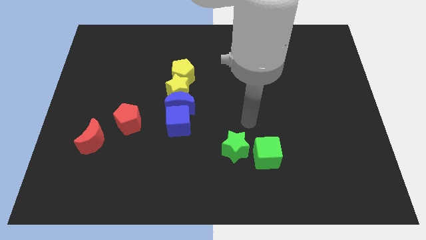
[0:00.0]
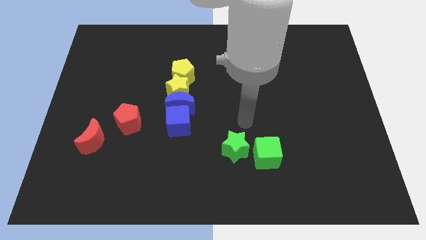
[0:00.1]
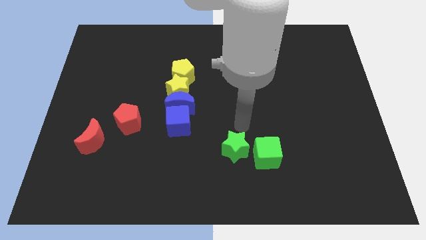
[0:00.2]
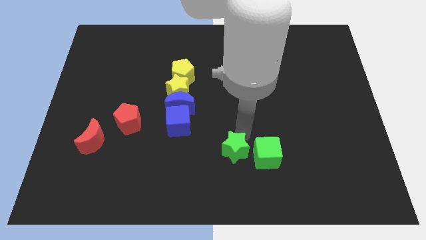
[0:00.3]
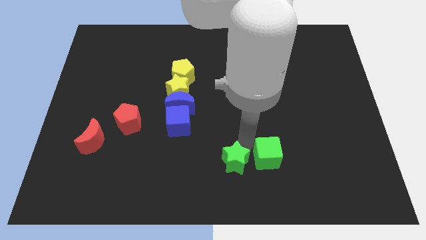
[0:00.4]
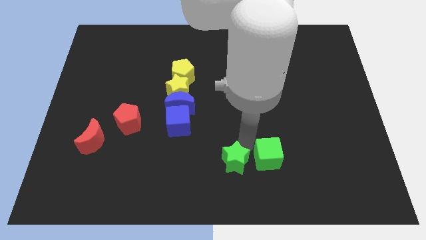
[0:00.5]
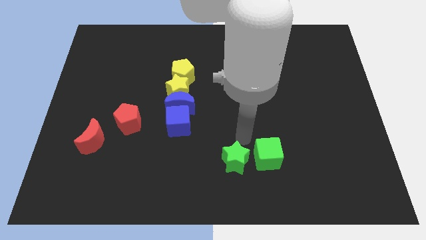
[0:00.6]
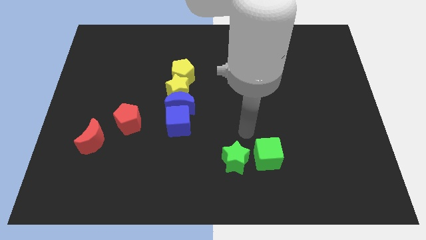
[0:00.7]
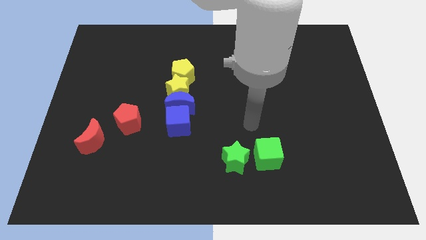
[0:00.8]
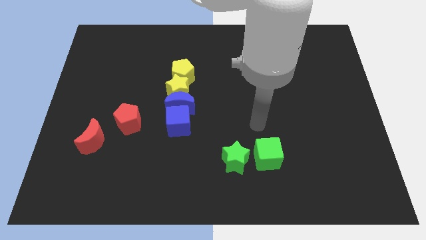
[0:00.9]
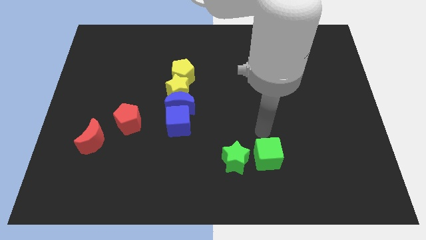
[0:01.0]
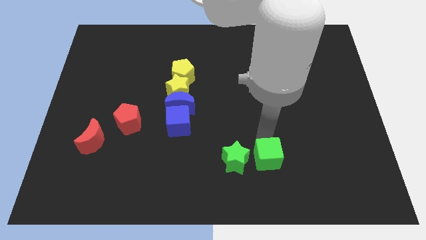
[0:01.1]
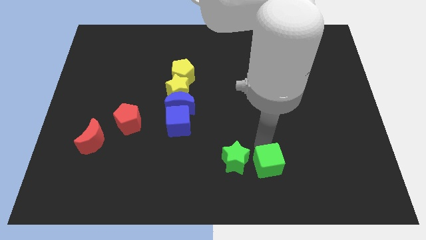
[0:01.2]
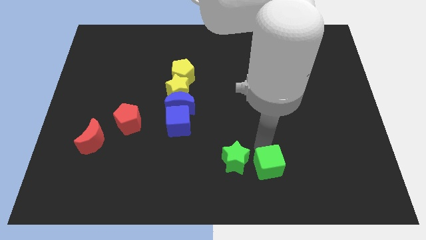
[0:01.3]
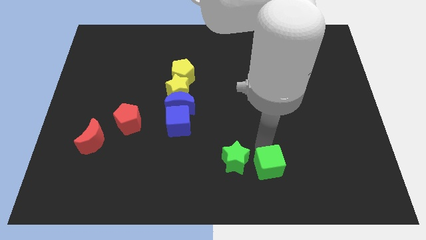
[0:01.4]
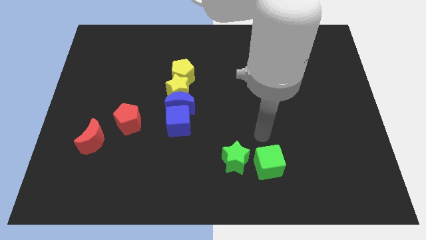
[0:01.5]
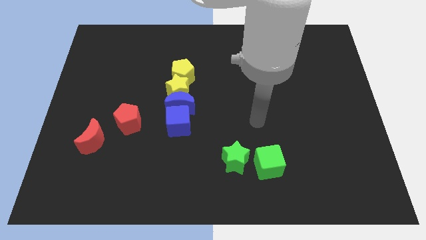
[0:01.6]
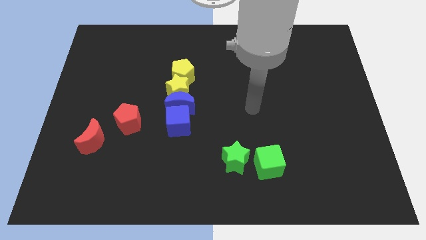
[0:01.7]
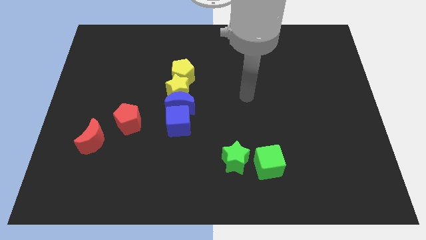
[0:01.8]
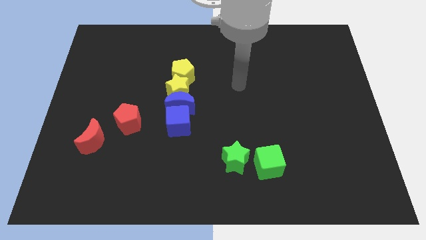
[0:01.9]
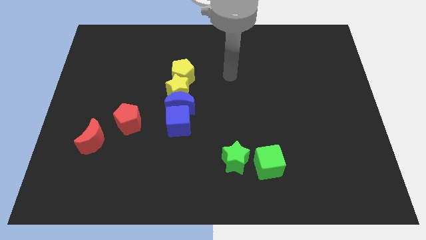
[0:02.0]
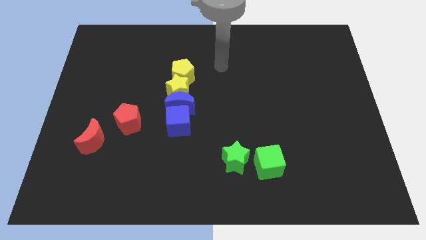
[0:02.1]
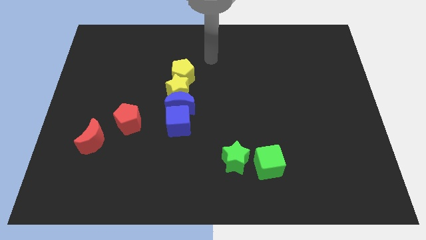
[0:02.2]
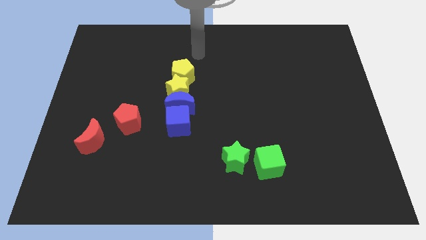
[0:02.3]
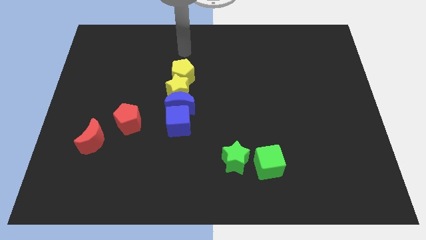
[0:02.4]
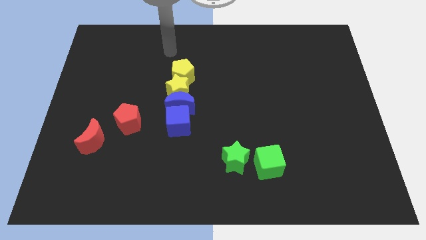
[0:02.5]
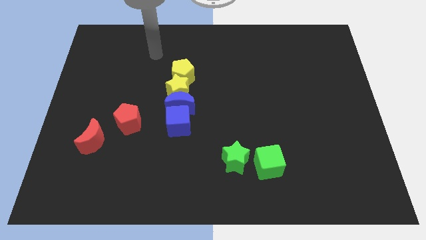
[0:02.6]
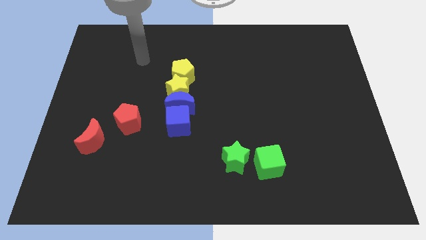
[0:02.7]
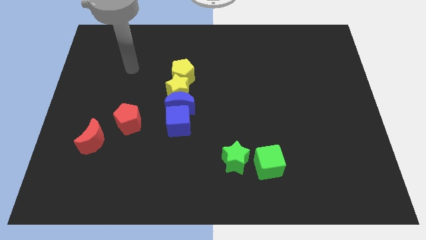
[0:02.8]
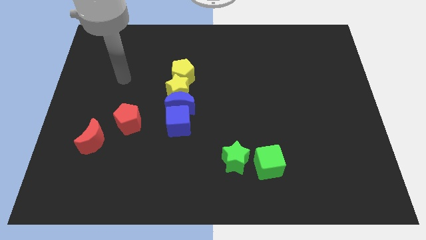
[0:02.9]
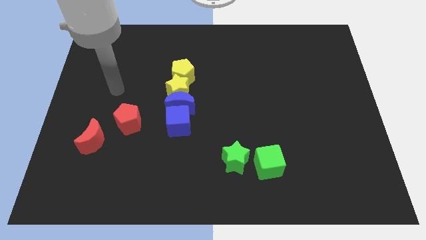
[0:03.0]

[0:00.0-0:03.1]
tap the green blocks

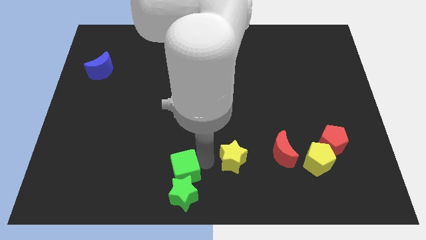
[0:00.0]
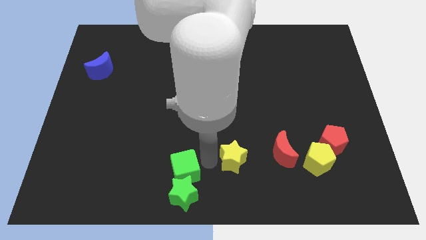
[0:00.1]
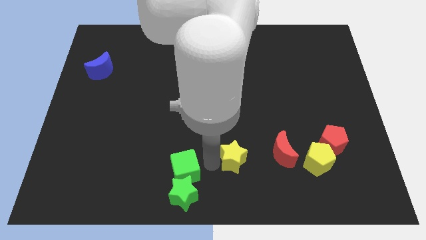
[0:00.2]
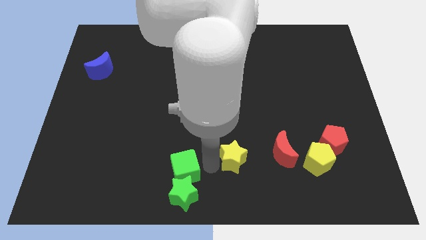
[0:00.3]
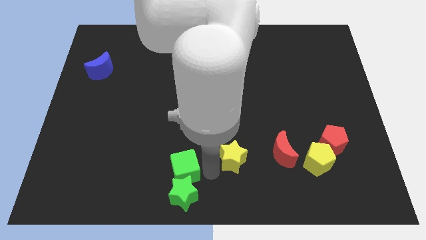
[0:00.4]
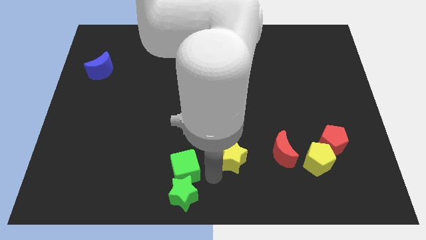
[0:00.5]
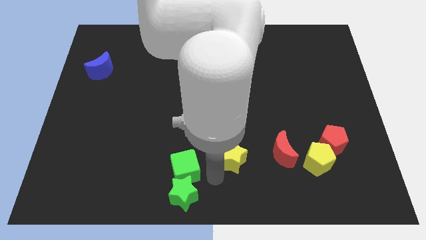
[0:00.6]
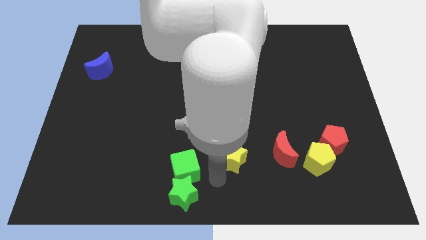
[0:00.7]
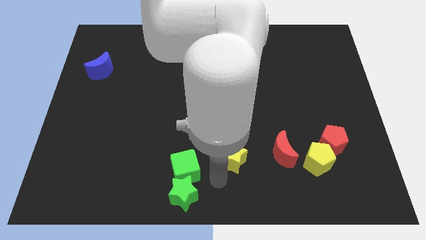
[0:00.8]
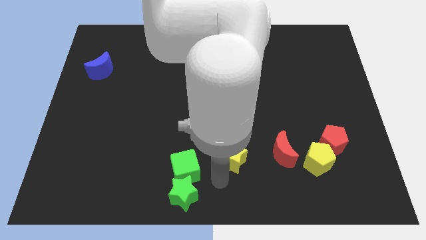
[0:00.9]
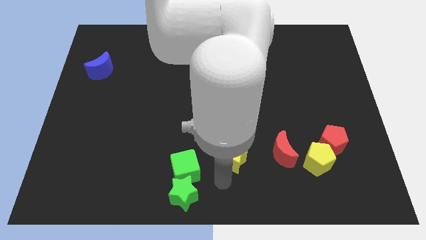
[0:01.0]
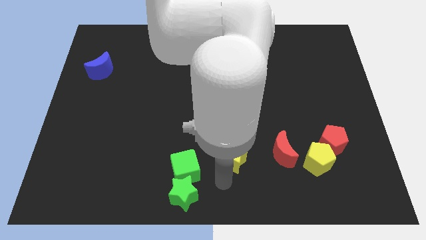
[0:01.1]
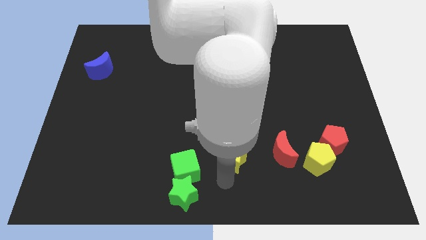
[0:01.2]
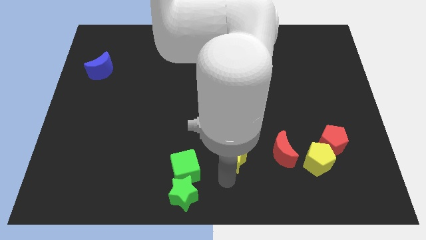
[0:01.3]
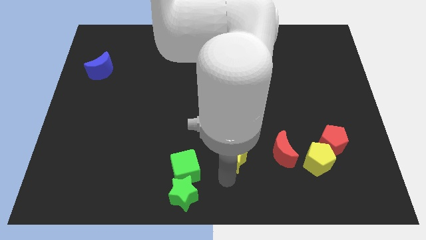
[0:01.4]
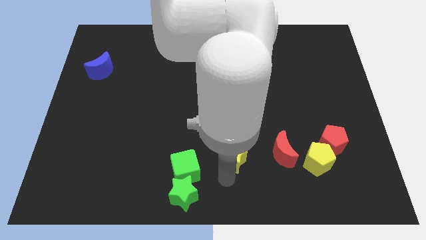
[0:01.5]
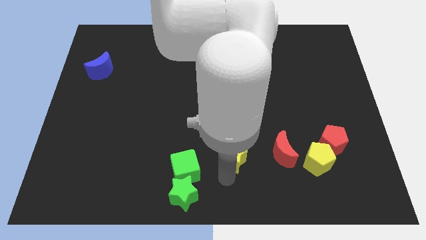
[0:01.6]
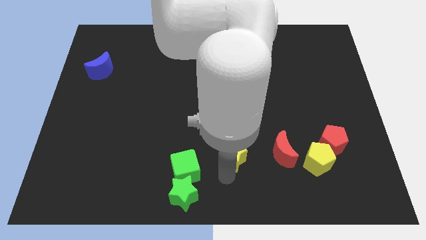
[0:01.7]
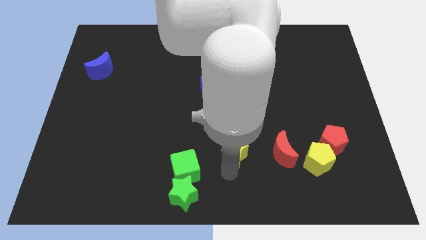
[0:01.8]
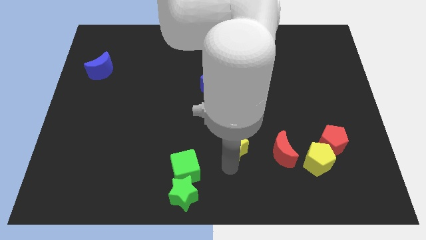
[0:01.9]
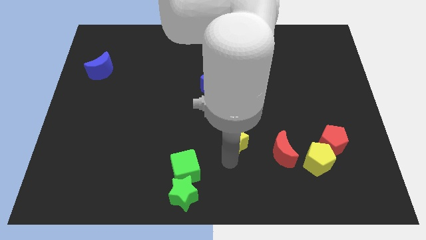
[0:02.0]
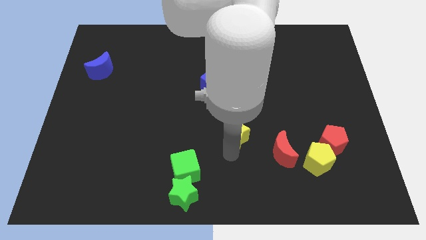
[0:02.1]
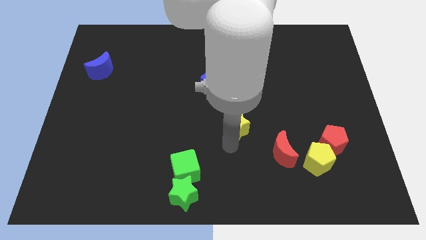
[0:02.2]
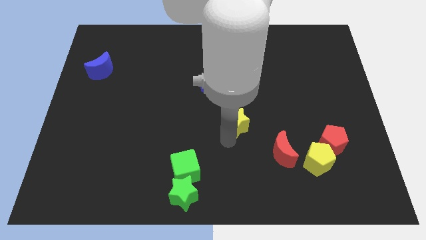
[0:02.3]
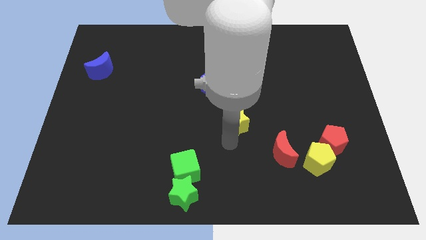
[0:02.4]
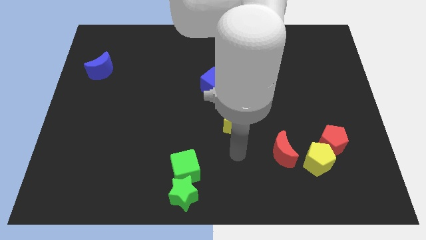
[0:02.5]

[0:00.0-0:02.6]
slightly push the yellow star below blue cube

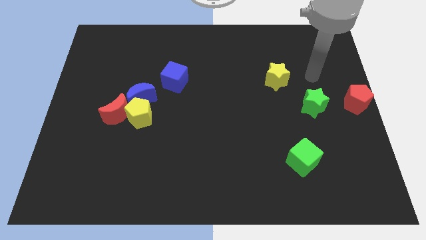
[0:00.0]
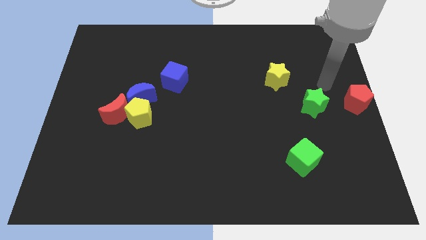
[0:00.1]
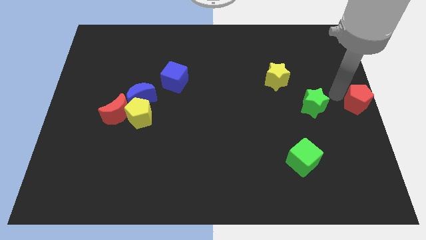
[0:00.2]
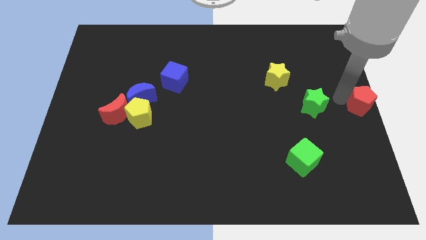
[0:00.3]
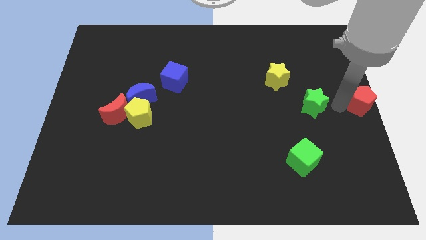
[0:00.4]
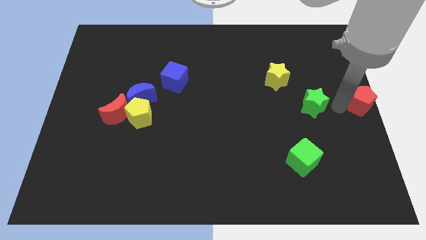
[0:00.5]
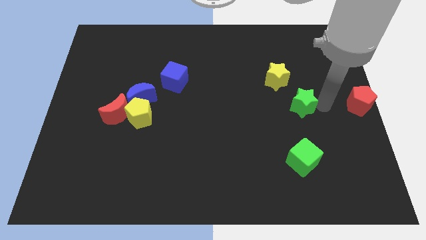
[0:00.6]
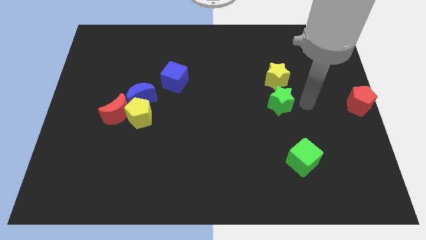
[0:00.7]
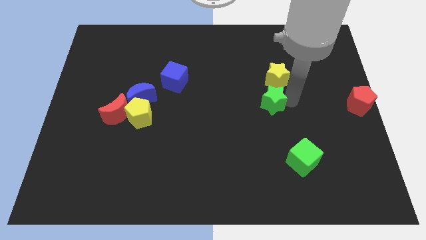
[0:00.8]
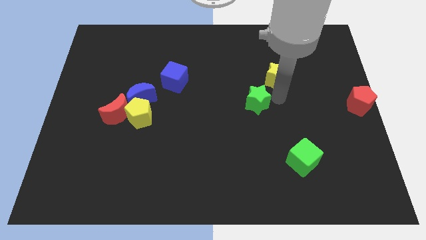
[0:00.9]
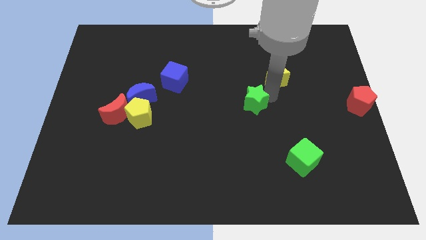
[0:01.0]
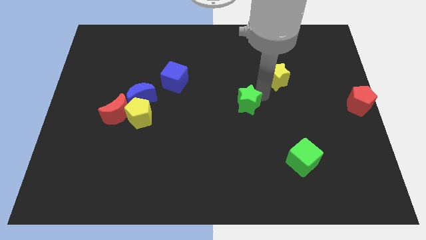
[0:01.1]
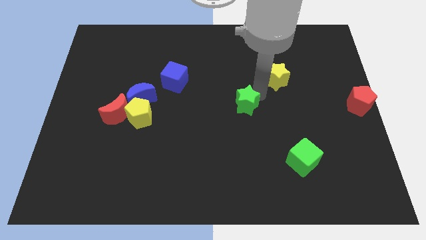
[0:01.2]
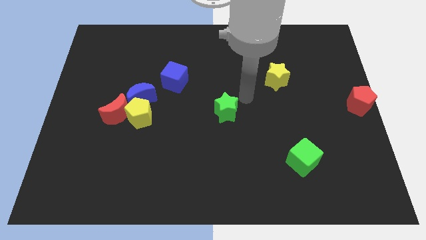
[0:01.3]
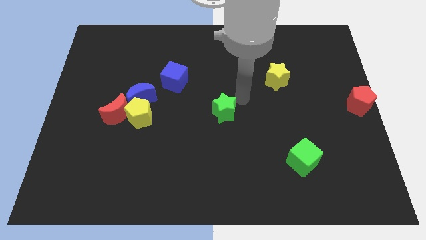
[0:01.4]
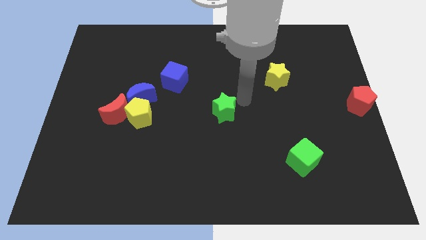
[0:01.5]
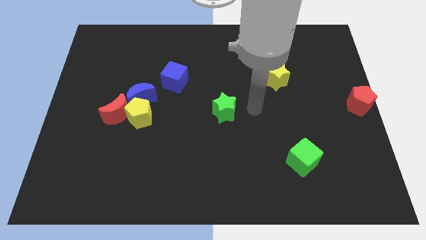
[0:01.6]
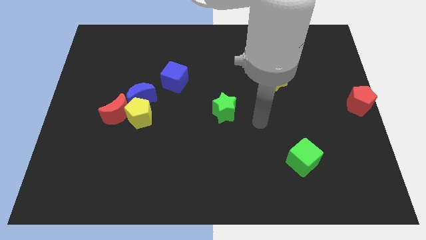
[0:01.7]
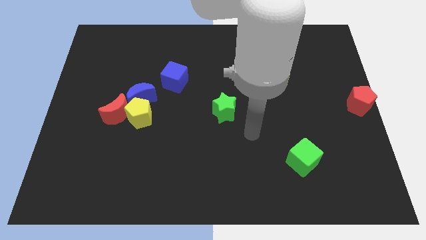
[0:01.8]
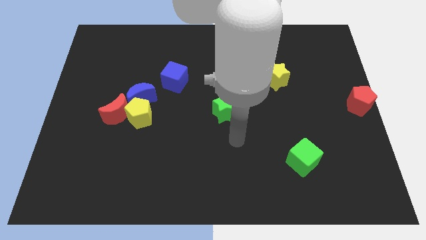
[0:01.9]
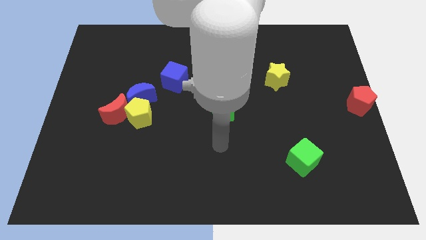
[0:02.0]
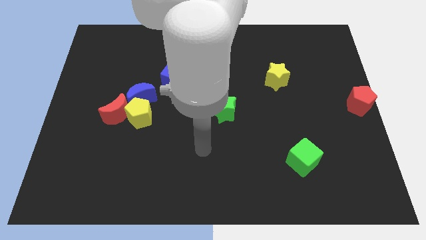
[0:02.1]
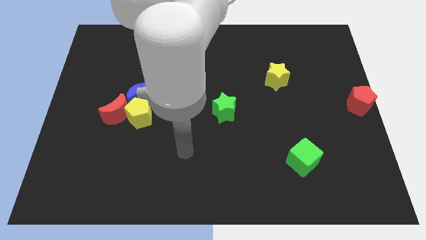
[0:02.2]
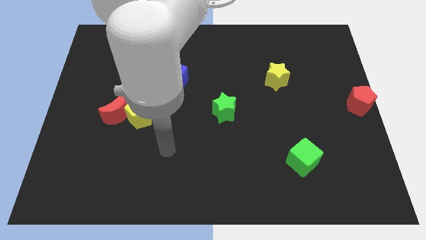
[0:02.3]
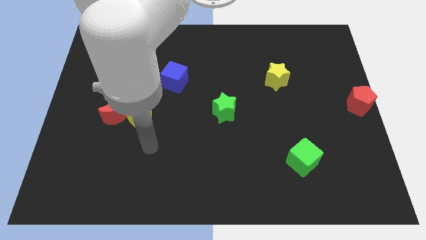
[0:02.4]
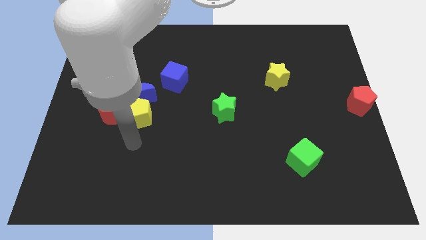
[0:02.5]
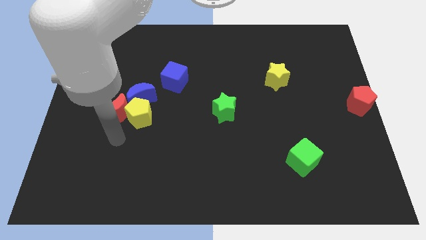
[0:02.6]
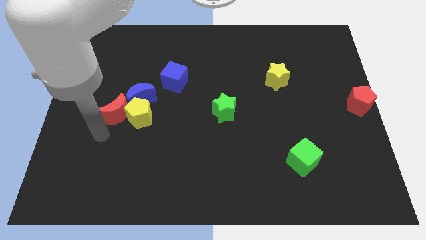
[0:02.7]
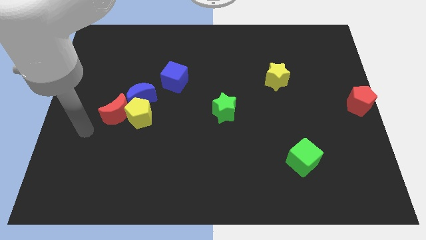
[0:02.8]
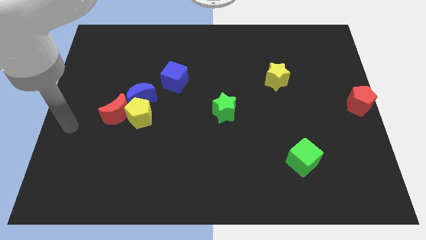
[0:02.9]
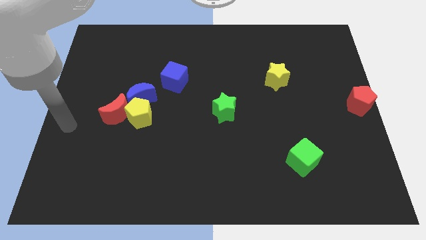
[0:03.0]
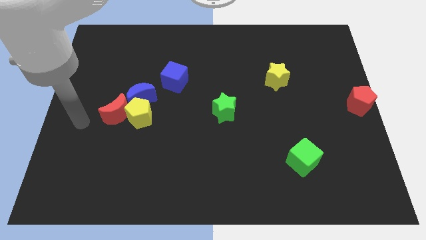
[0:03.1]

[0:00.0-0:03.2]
move the green star to the center of the board
